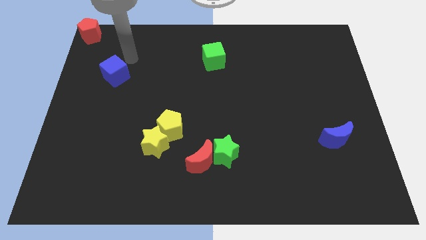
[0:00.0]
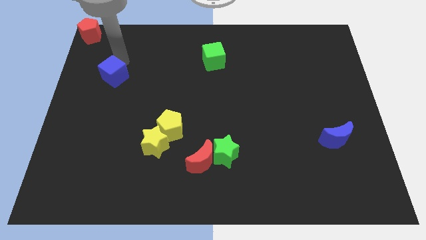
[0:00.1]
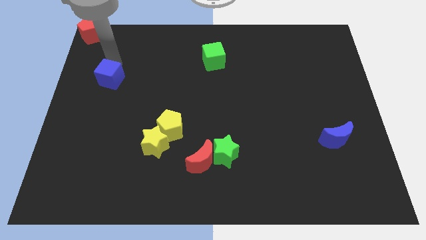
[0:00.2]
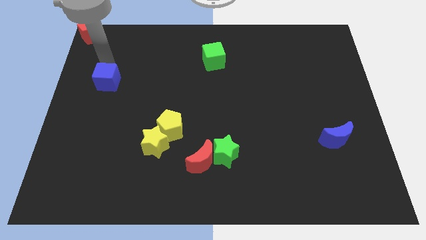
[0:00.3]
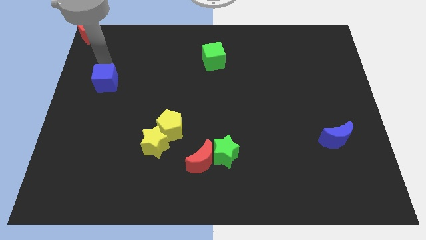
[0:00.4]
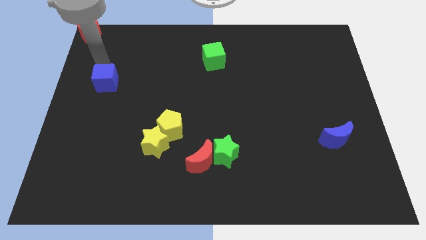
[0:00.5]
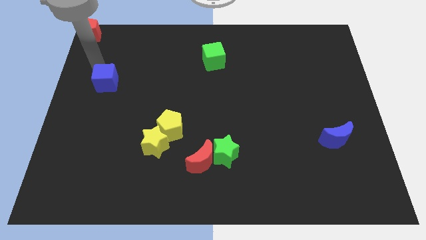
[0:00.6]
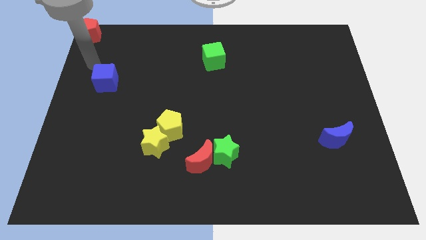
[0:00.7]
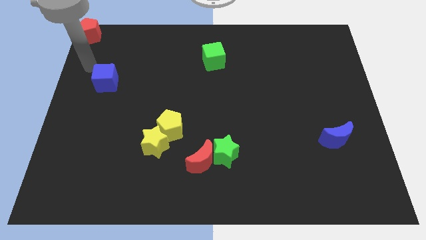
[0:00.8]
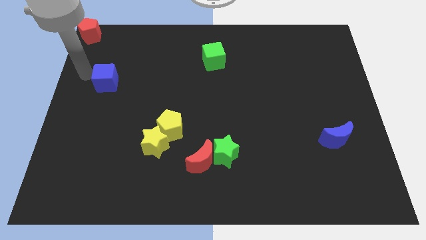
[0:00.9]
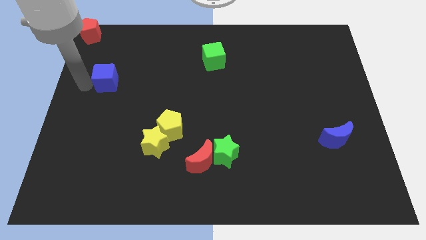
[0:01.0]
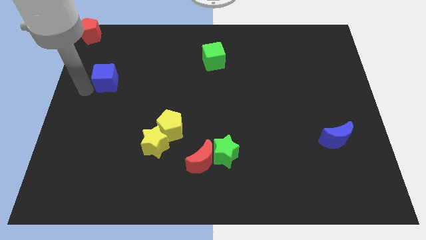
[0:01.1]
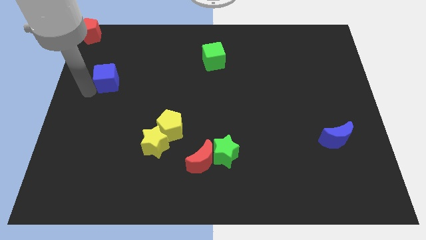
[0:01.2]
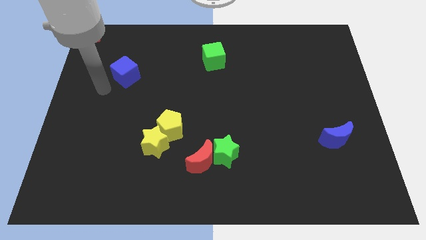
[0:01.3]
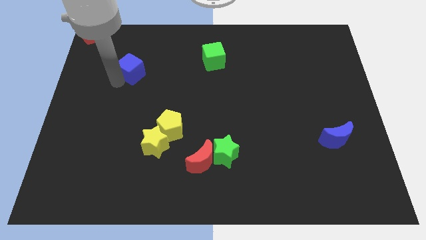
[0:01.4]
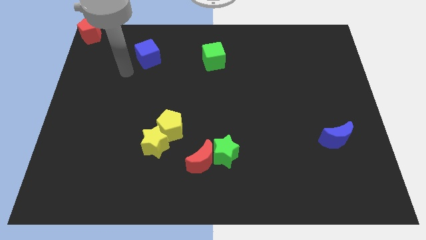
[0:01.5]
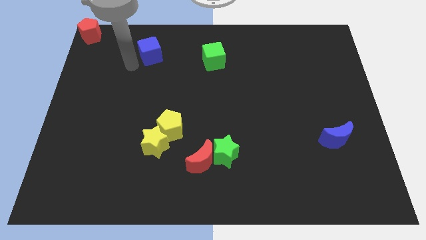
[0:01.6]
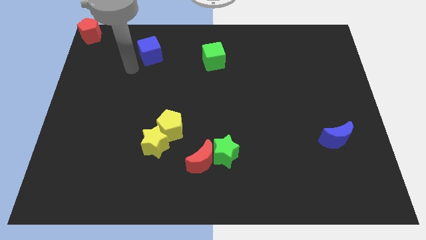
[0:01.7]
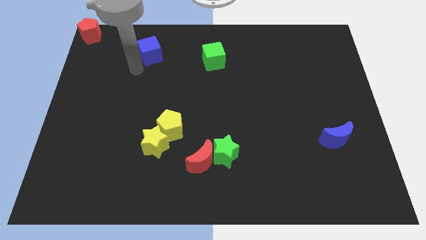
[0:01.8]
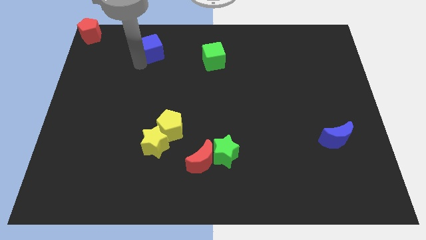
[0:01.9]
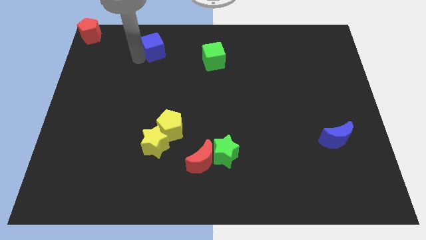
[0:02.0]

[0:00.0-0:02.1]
move the blue cube in between red pentagon and green cube

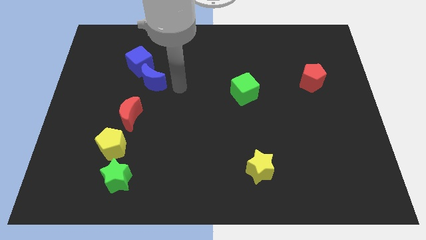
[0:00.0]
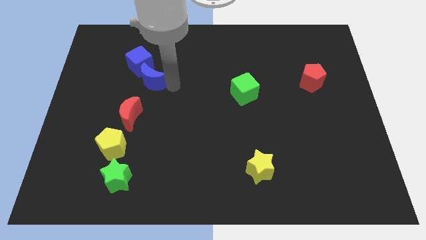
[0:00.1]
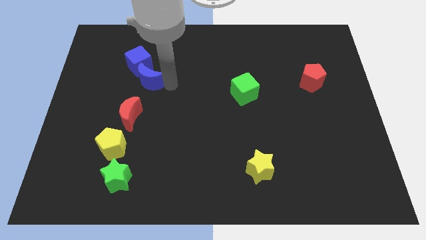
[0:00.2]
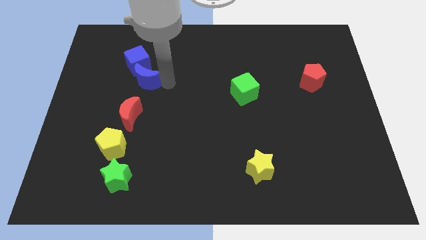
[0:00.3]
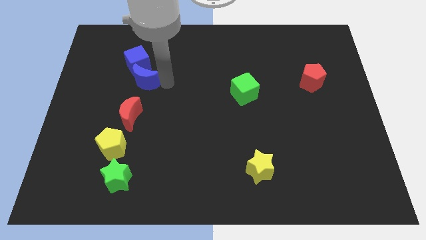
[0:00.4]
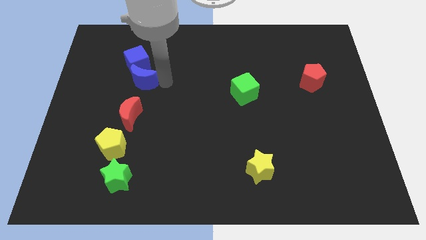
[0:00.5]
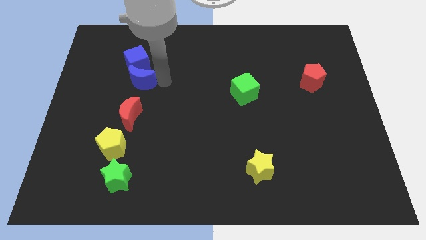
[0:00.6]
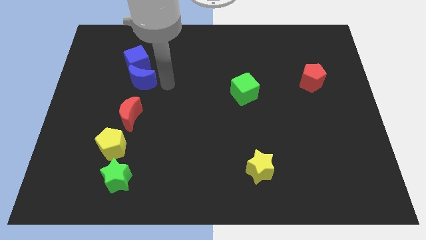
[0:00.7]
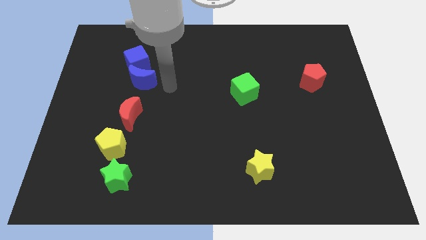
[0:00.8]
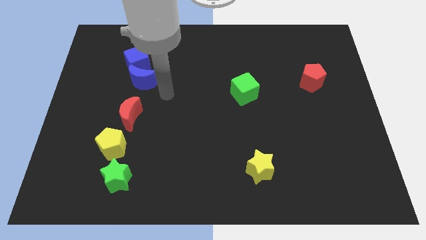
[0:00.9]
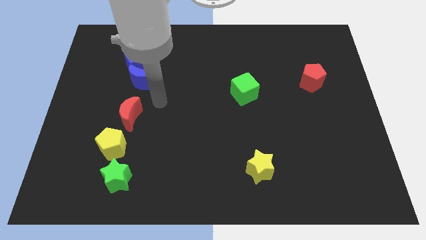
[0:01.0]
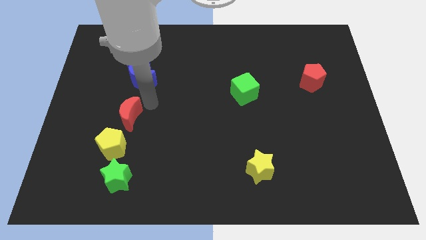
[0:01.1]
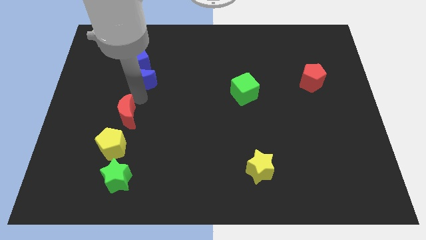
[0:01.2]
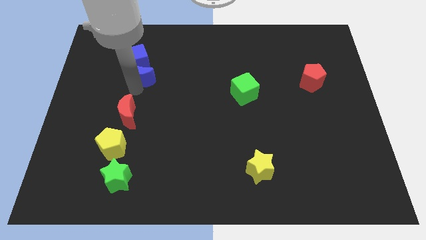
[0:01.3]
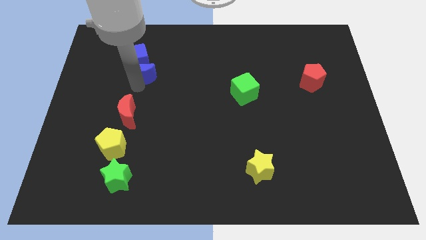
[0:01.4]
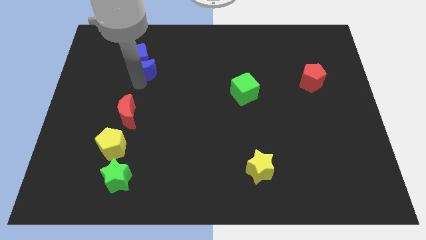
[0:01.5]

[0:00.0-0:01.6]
move the blue moon into the blue cube

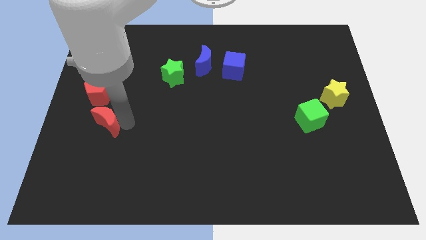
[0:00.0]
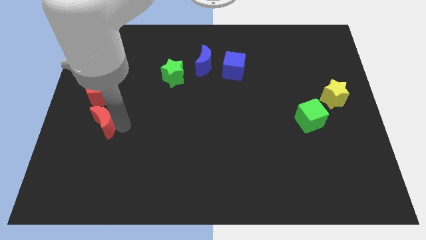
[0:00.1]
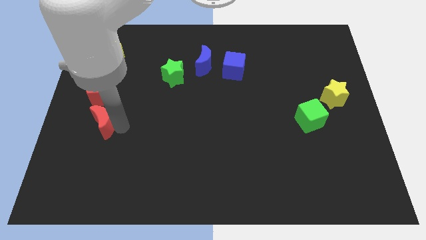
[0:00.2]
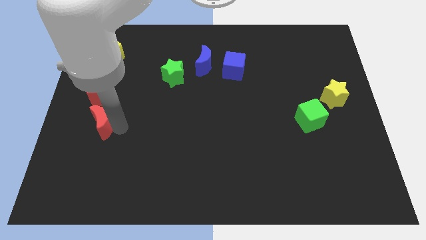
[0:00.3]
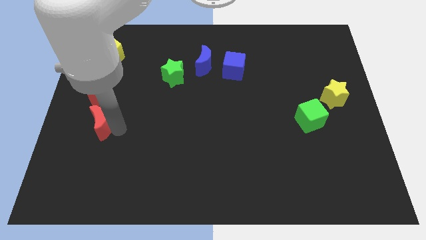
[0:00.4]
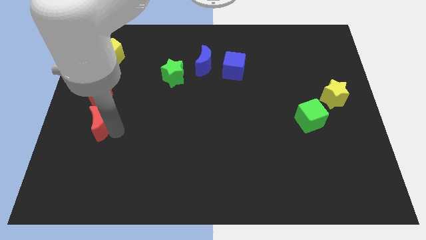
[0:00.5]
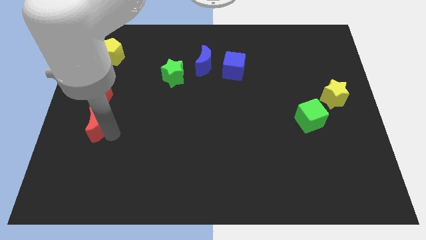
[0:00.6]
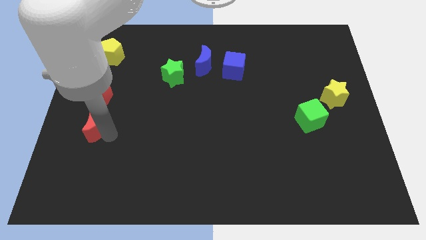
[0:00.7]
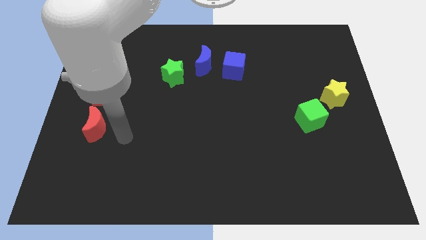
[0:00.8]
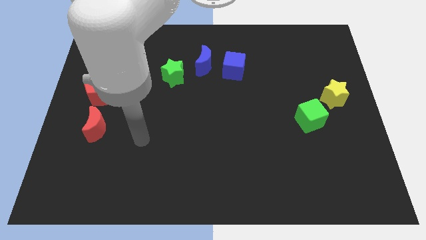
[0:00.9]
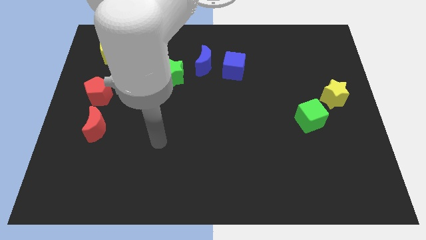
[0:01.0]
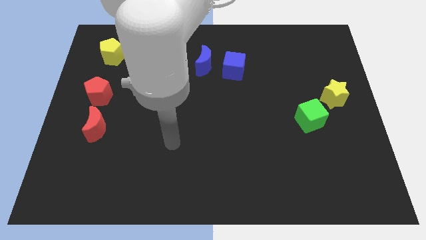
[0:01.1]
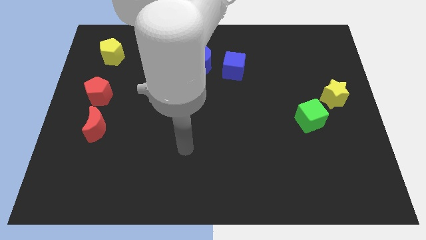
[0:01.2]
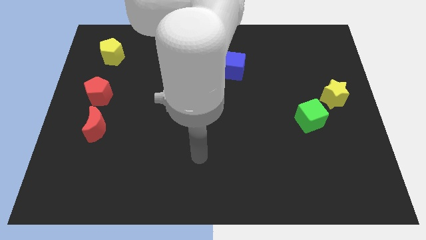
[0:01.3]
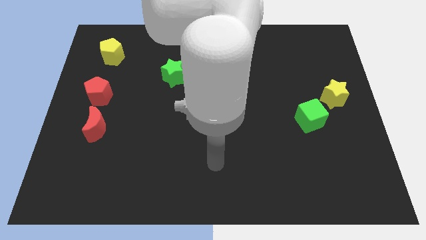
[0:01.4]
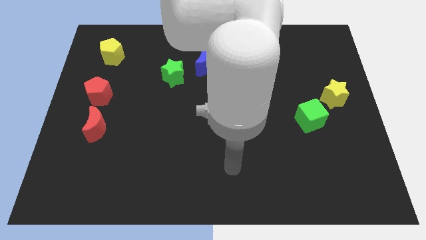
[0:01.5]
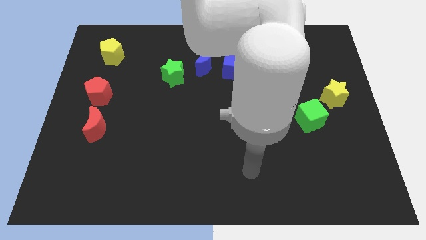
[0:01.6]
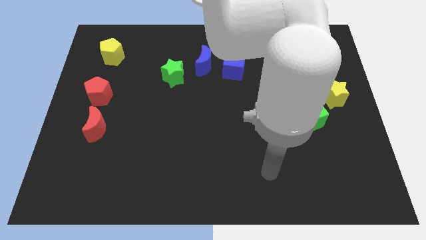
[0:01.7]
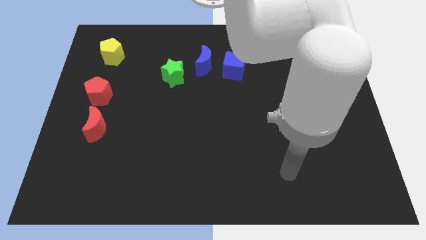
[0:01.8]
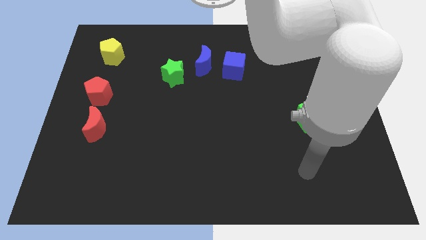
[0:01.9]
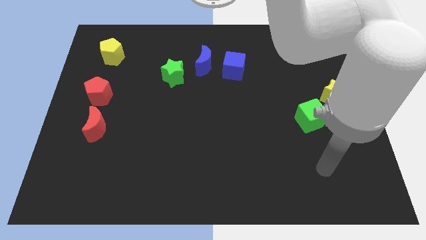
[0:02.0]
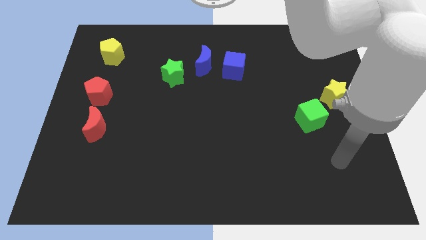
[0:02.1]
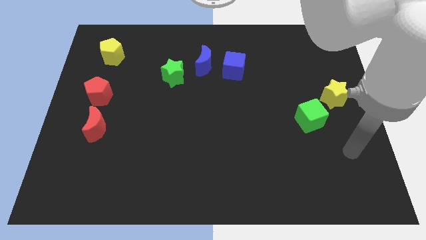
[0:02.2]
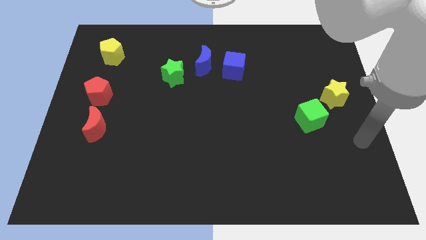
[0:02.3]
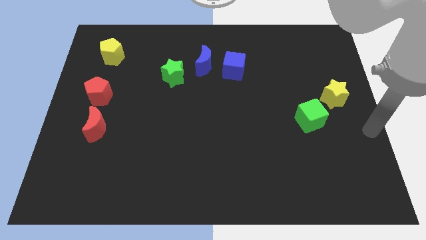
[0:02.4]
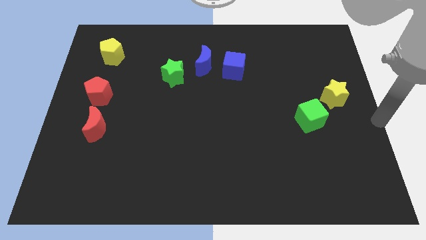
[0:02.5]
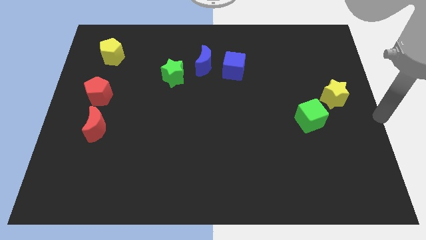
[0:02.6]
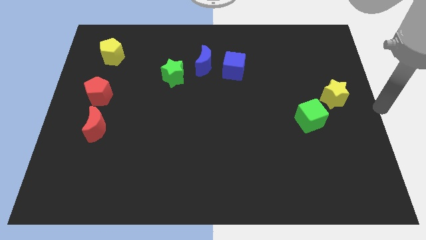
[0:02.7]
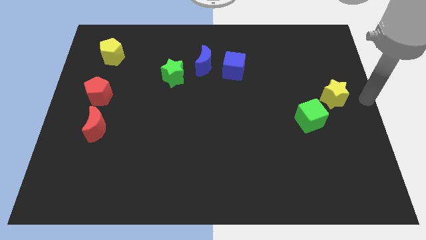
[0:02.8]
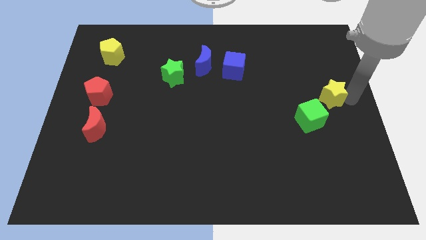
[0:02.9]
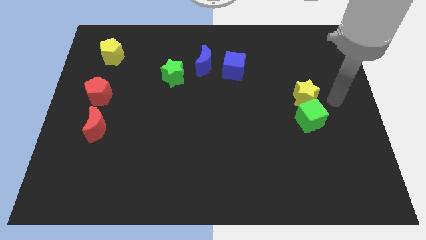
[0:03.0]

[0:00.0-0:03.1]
move your arm towards the right side of the yellow star

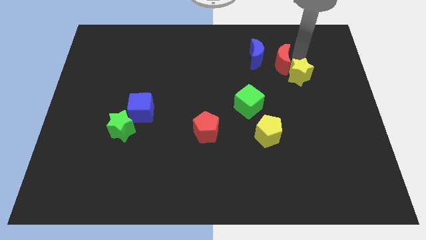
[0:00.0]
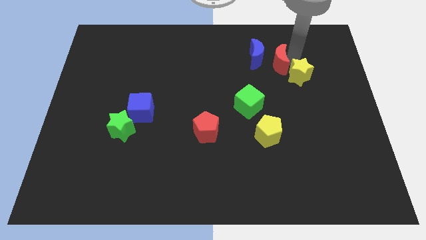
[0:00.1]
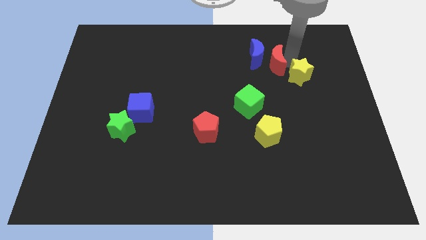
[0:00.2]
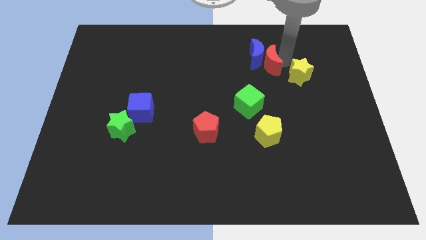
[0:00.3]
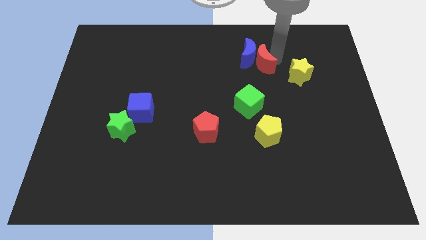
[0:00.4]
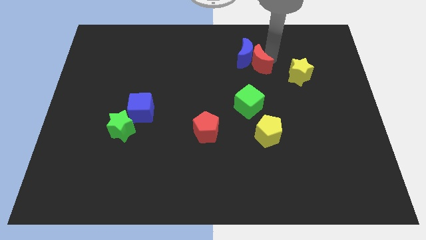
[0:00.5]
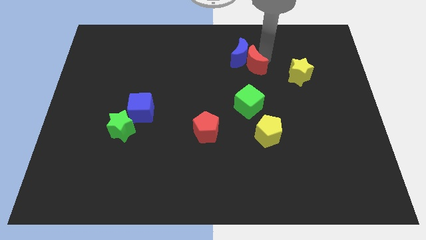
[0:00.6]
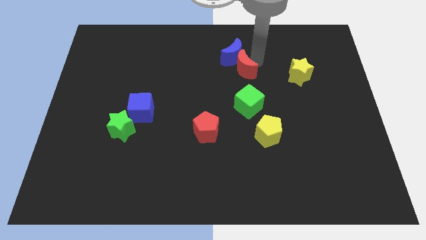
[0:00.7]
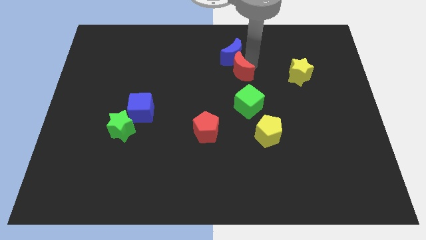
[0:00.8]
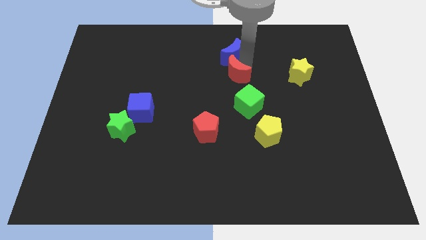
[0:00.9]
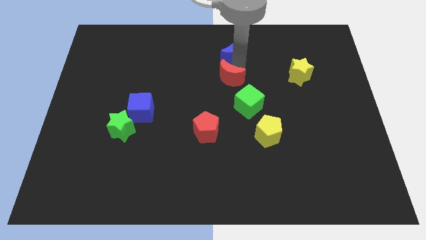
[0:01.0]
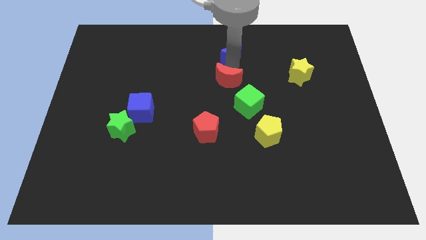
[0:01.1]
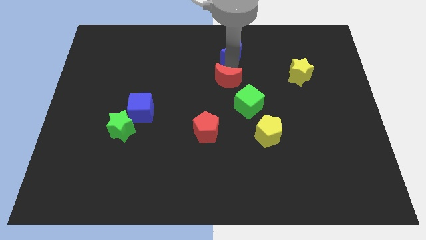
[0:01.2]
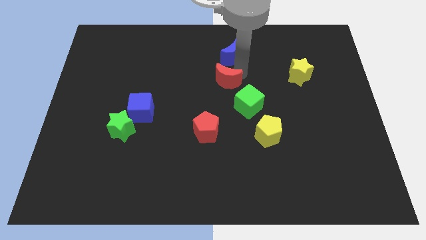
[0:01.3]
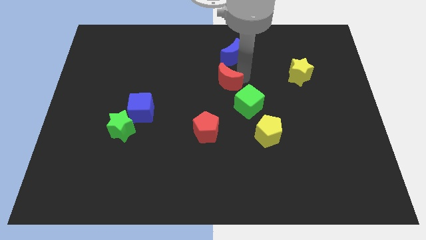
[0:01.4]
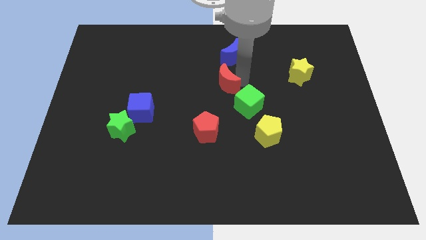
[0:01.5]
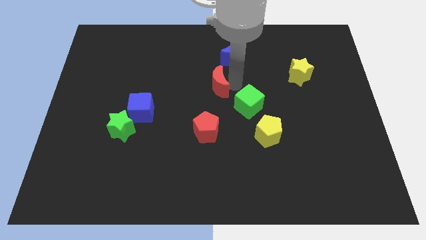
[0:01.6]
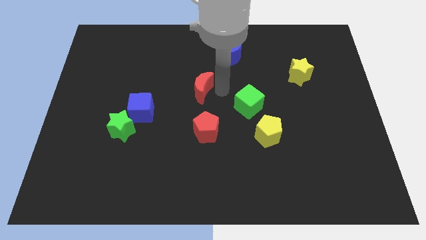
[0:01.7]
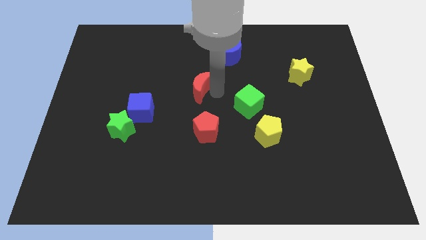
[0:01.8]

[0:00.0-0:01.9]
move the red moon towards the center of the board

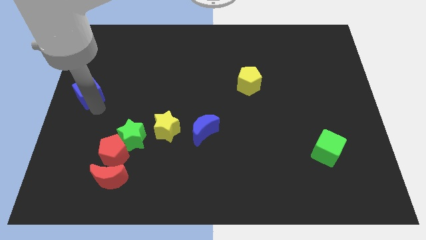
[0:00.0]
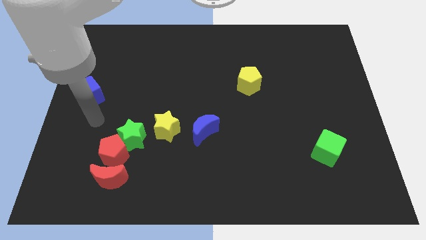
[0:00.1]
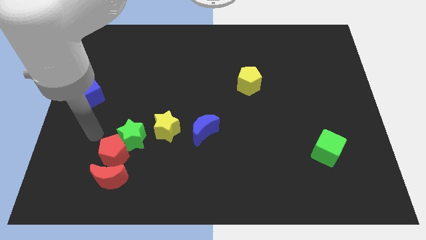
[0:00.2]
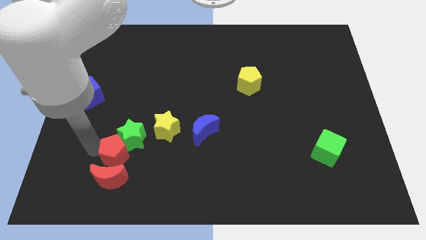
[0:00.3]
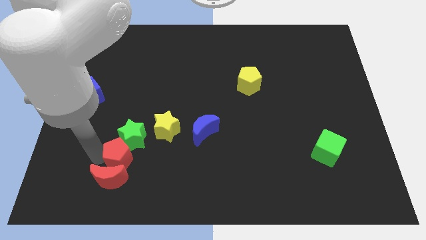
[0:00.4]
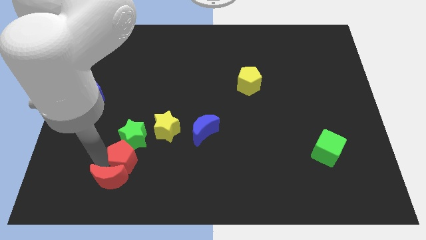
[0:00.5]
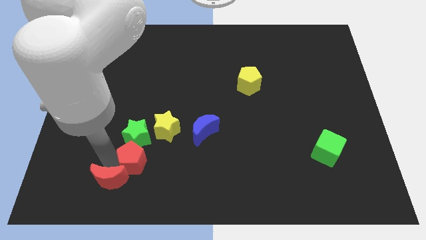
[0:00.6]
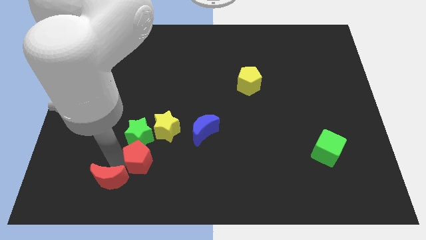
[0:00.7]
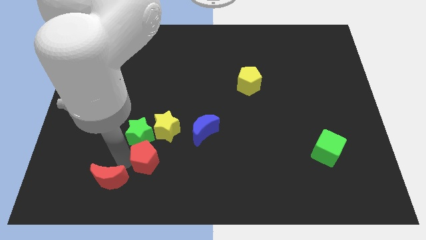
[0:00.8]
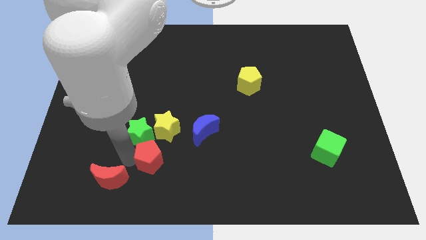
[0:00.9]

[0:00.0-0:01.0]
push the red pentagon to the bottom of the green star
